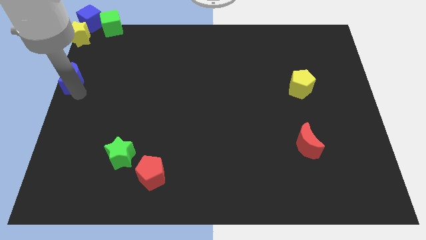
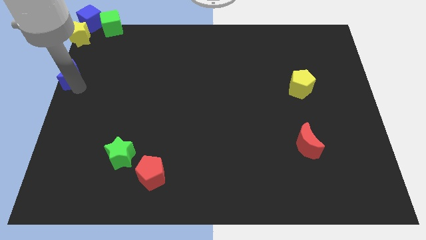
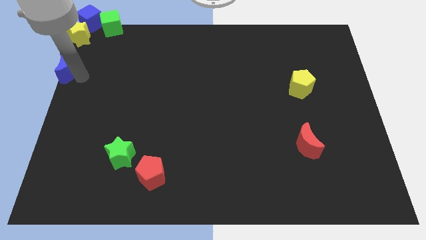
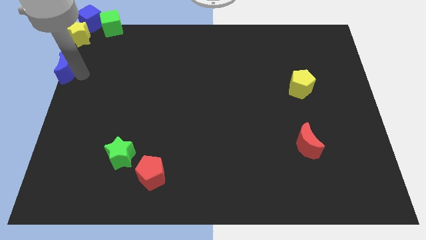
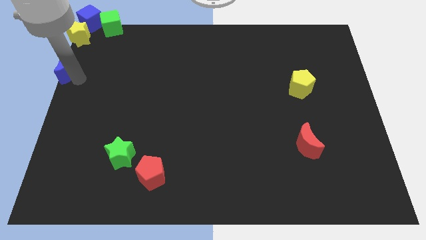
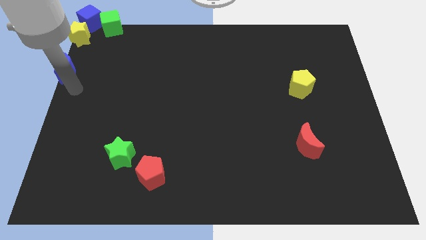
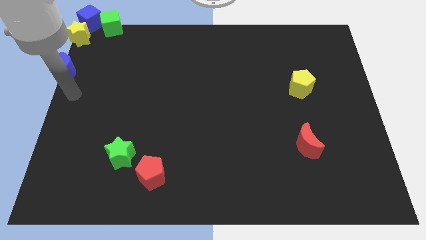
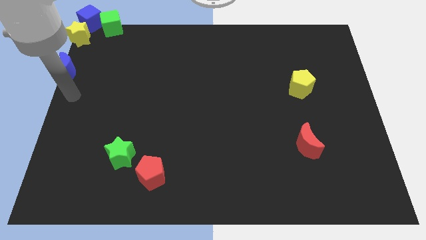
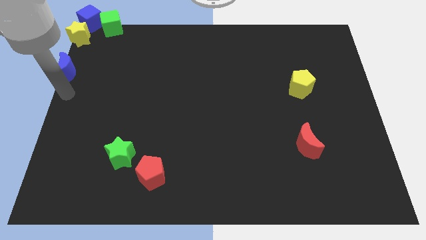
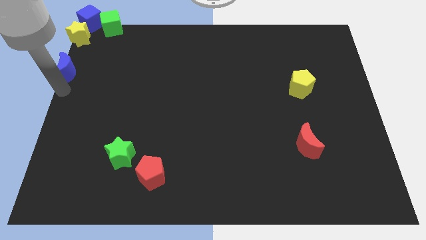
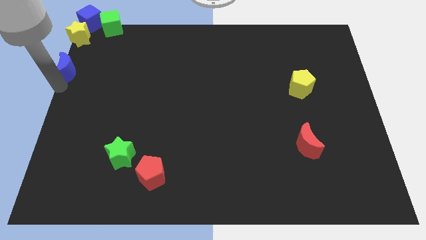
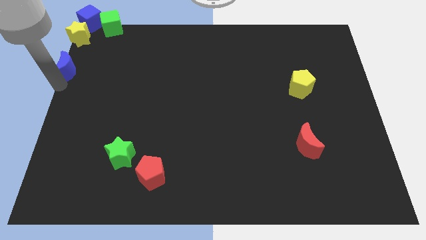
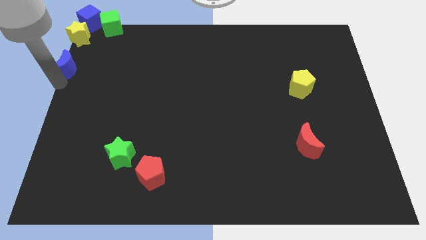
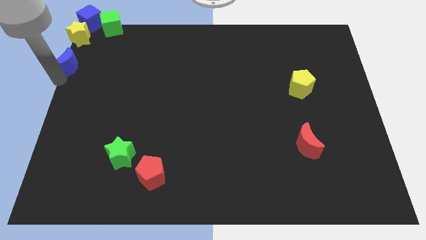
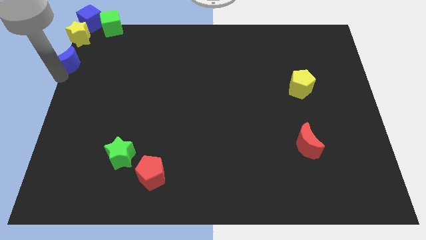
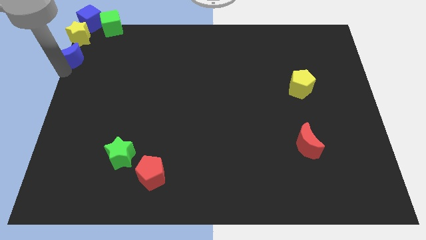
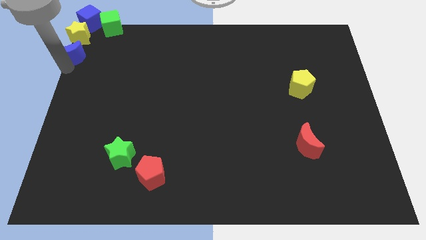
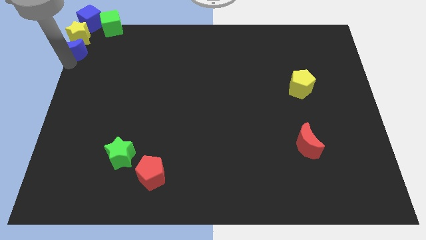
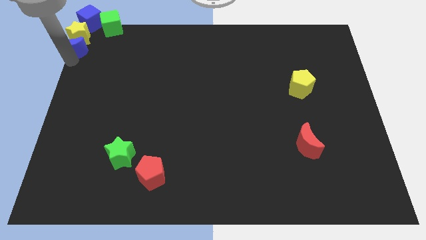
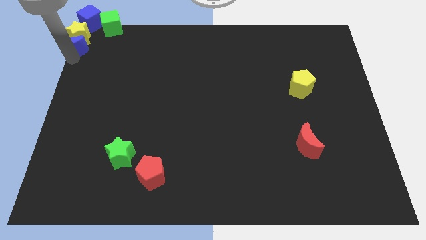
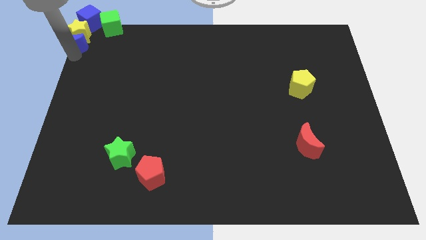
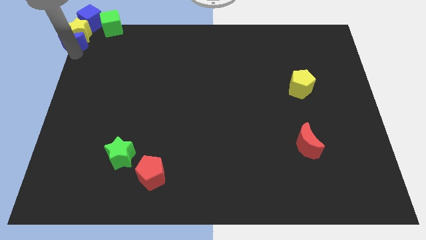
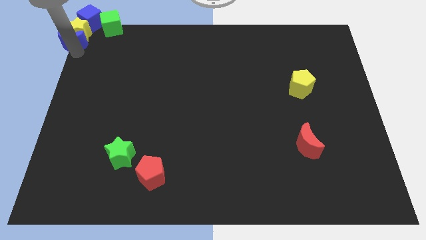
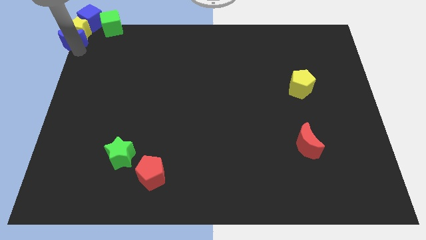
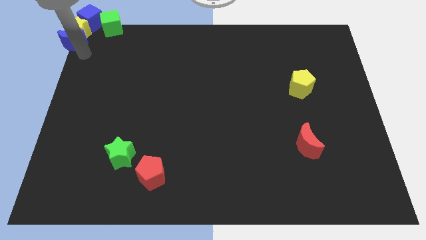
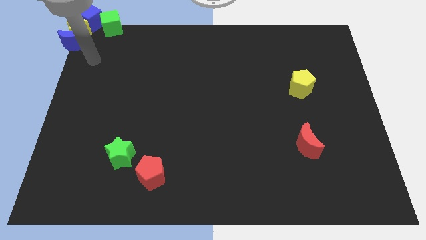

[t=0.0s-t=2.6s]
push the blue crescent into yellow star

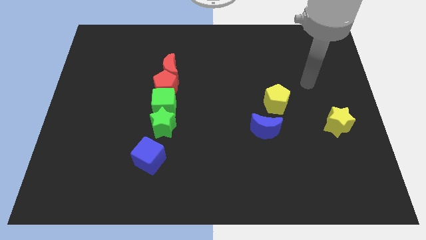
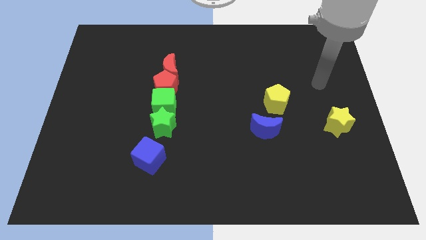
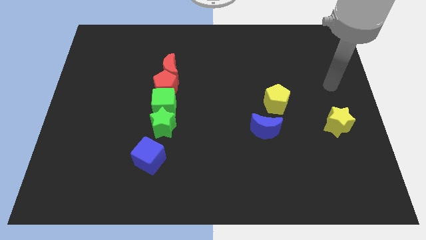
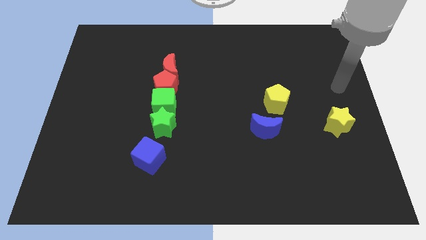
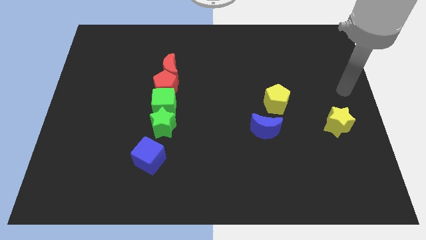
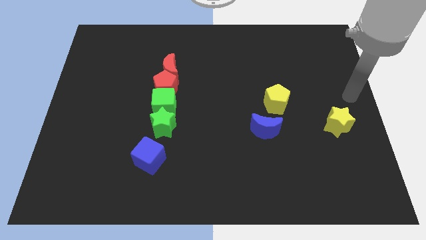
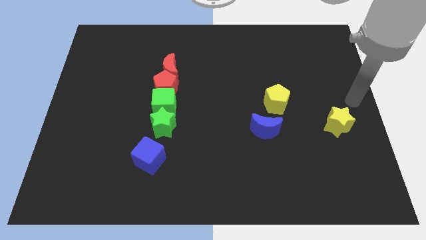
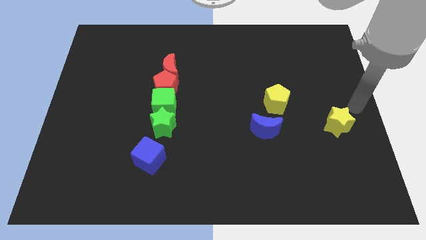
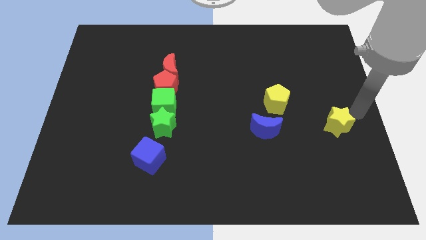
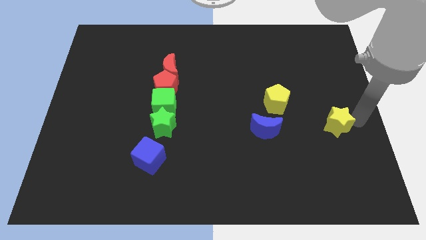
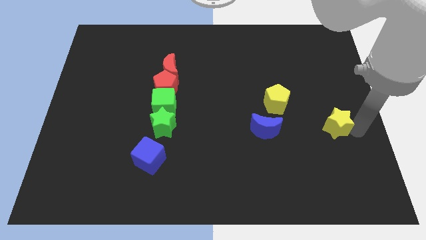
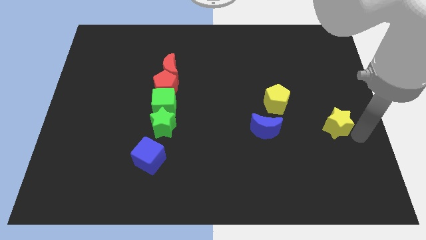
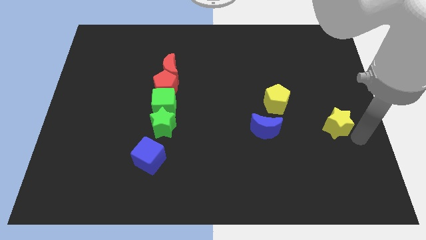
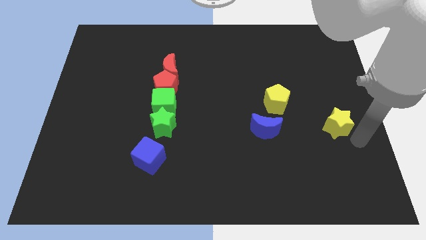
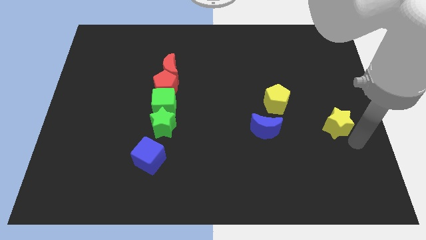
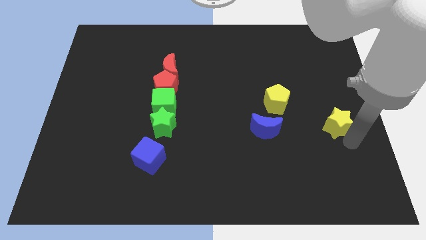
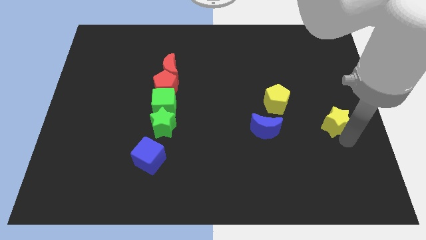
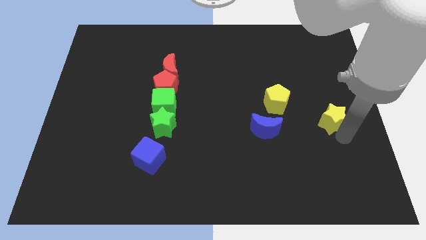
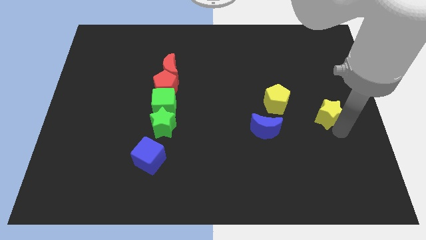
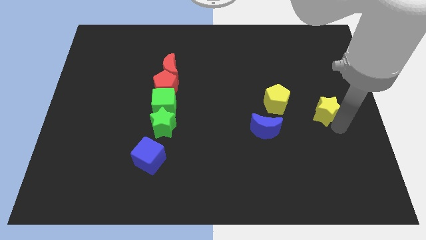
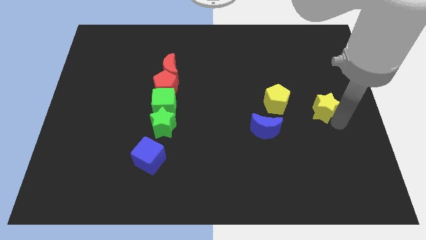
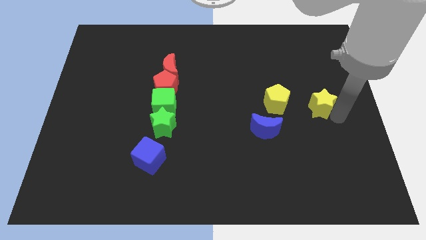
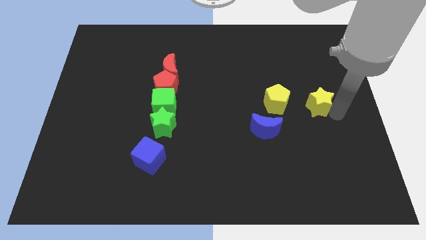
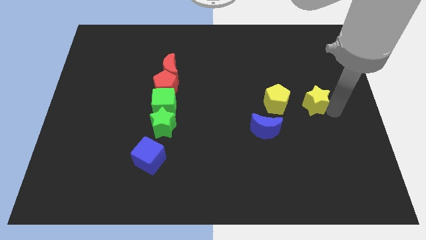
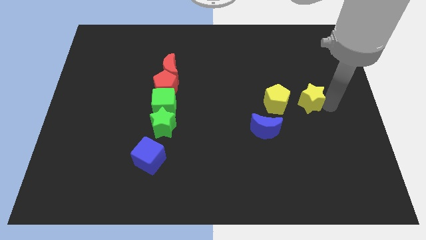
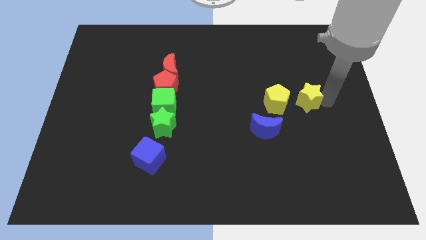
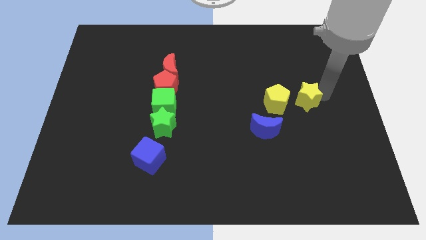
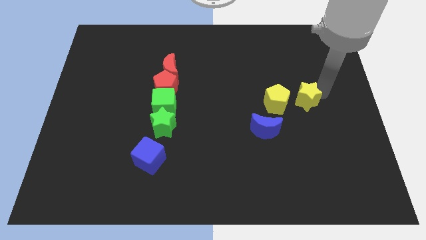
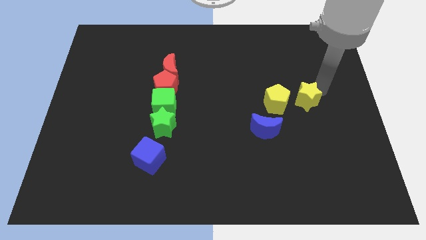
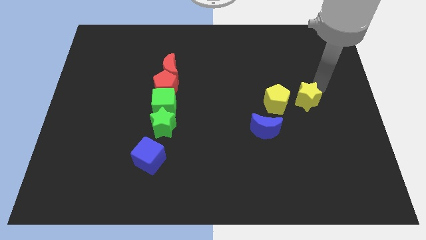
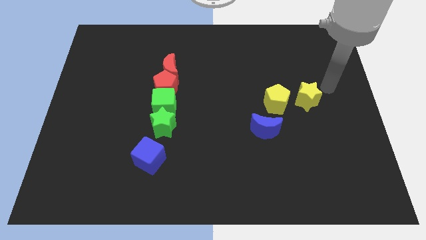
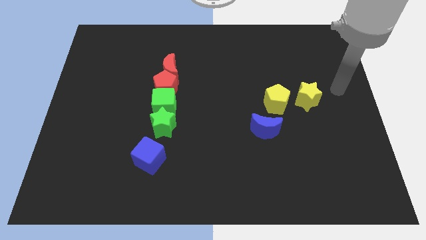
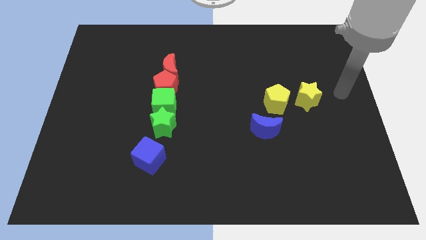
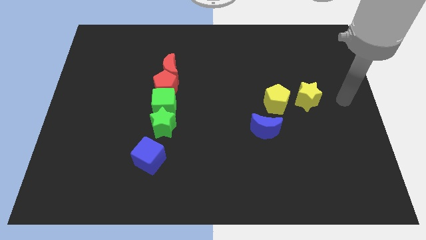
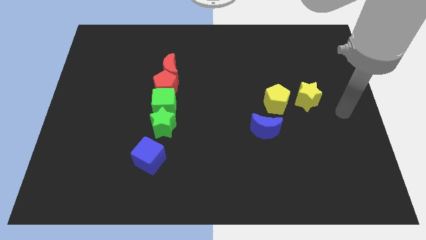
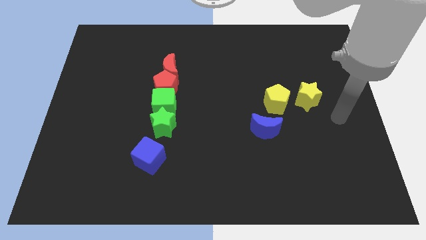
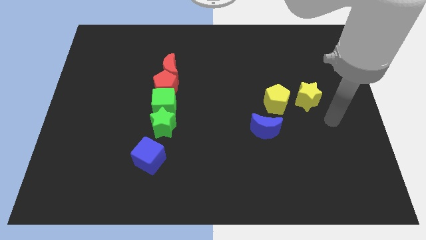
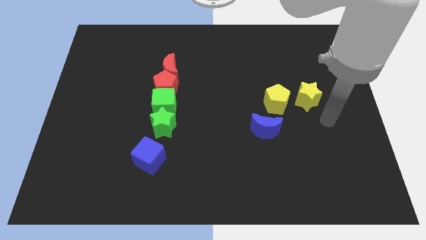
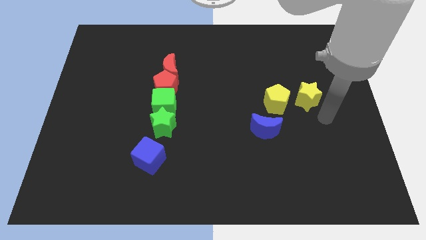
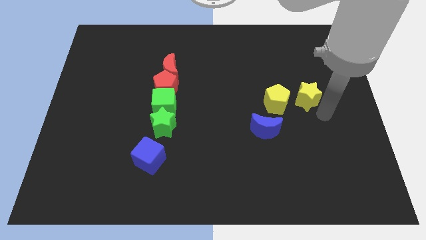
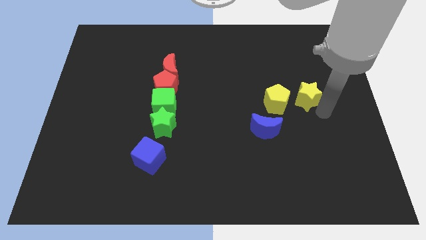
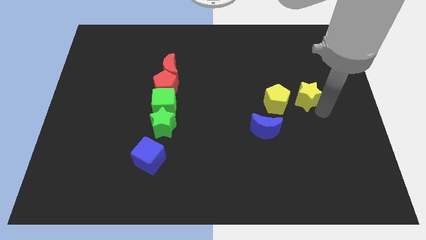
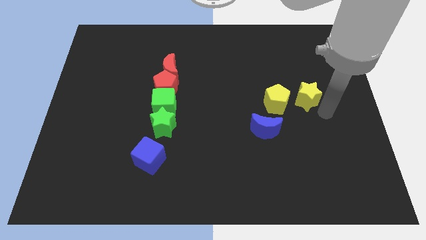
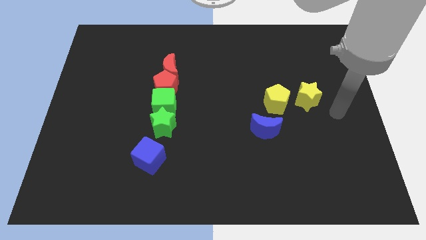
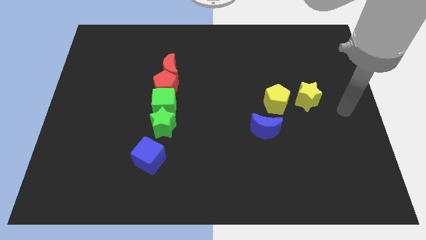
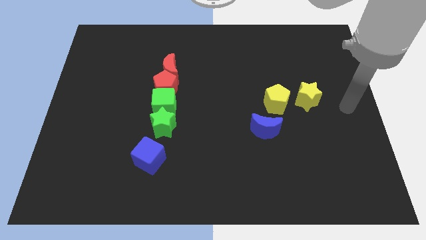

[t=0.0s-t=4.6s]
move the yellow star to the right of the yellow pentagon

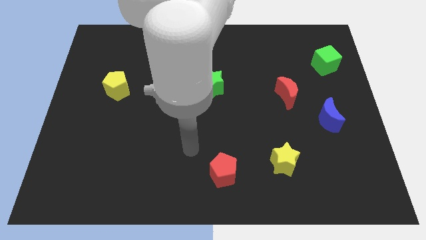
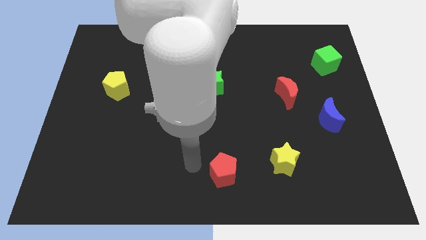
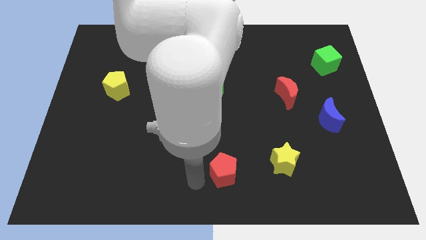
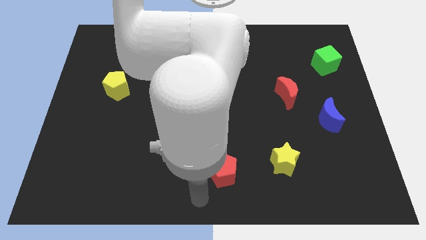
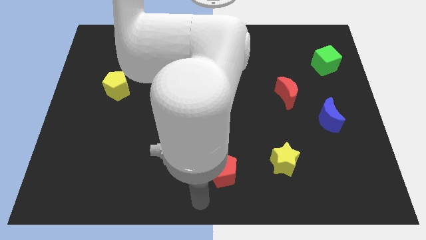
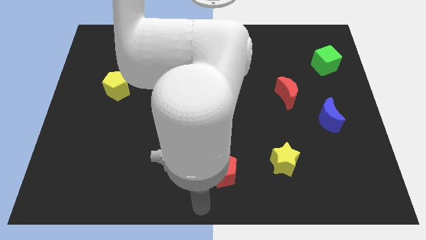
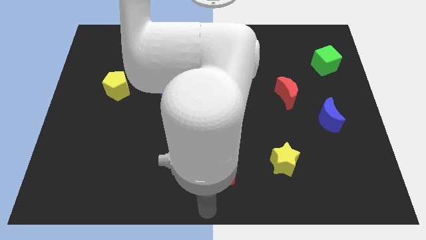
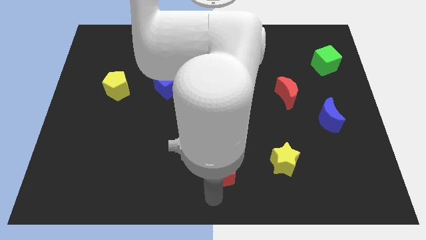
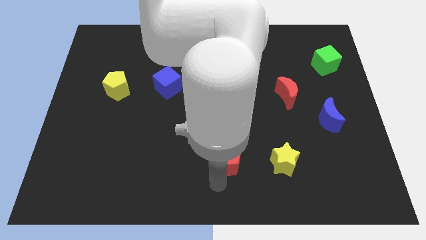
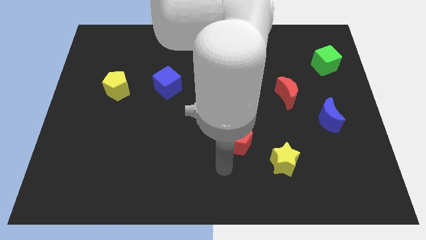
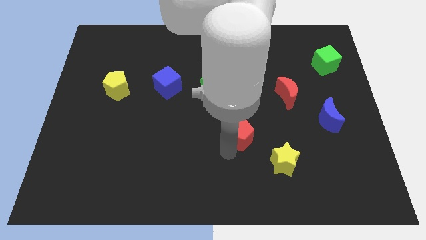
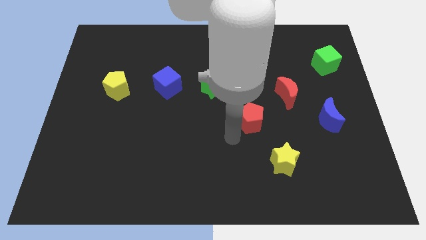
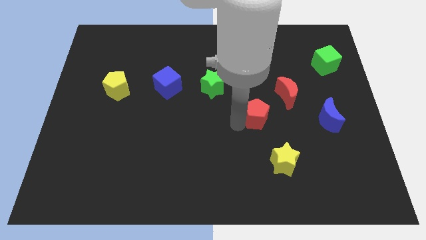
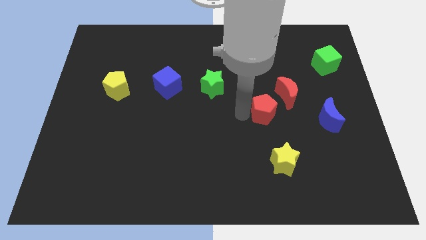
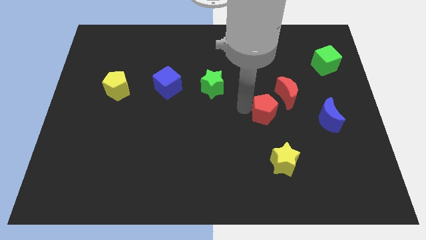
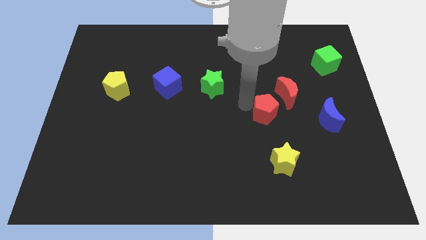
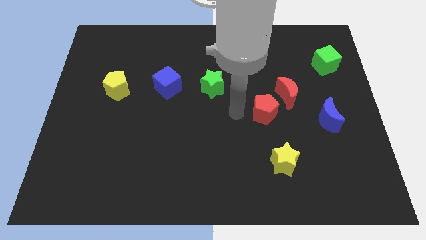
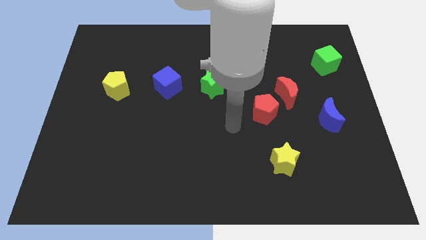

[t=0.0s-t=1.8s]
move the red pentagon diagonal left of red moon
